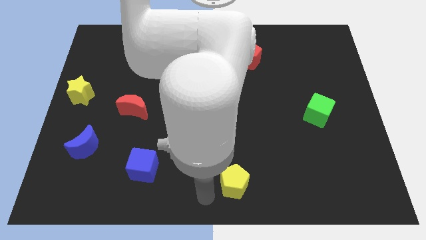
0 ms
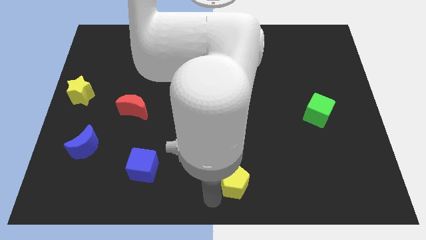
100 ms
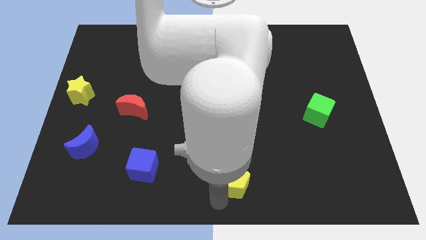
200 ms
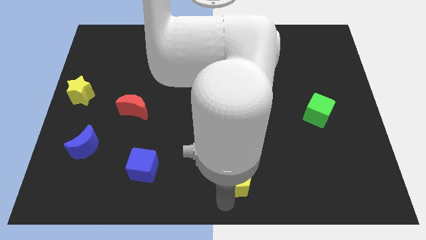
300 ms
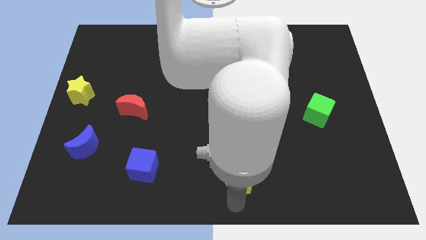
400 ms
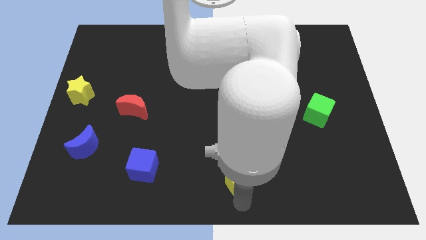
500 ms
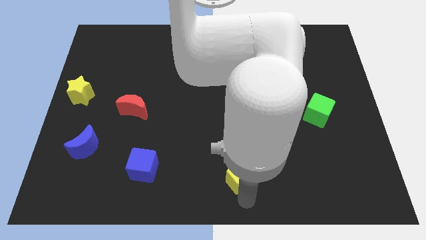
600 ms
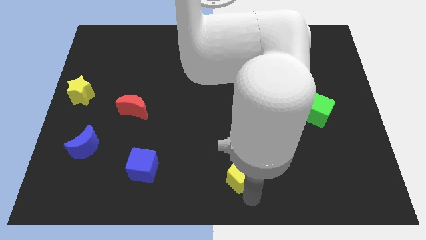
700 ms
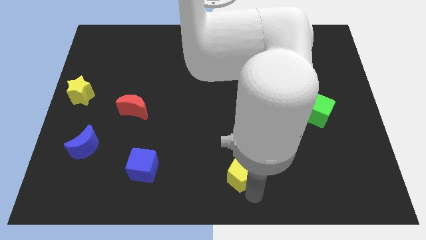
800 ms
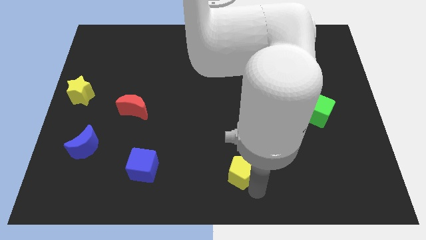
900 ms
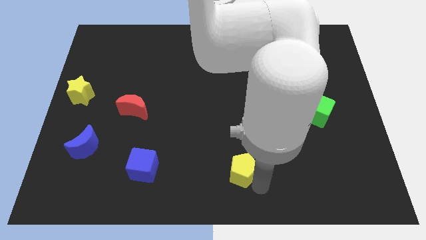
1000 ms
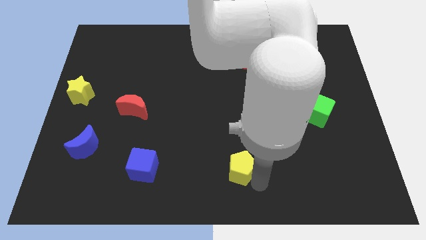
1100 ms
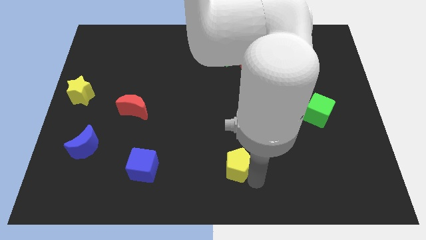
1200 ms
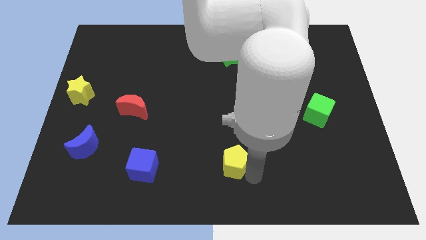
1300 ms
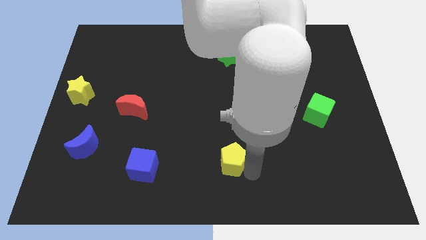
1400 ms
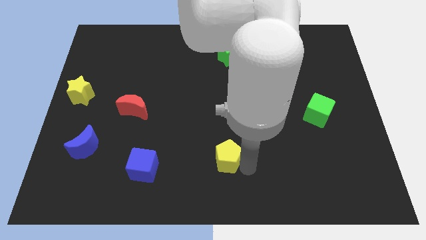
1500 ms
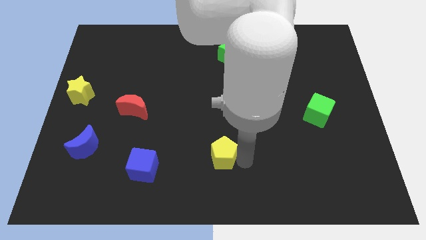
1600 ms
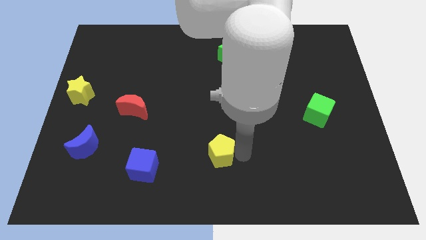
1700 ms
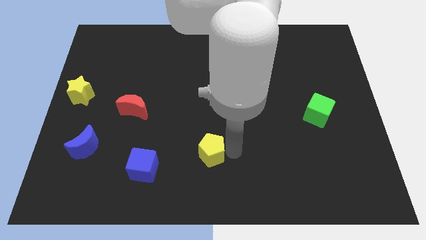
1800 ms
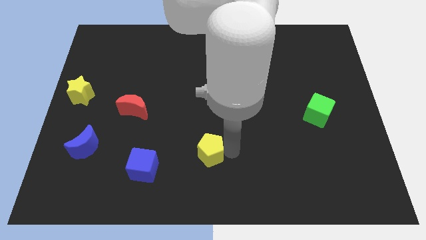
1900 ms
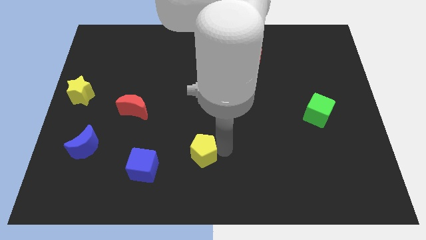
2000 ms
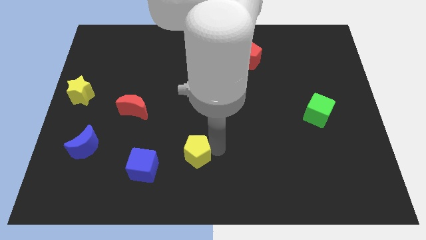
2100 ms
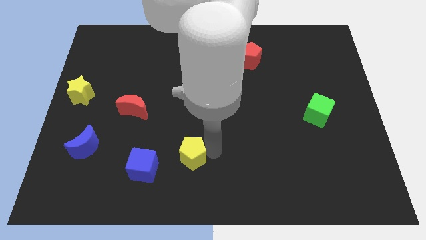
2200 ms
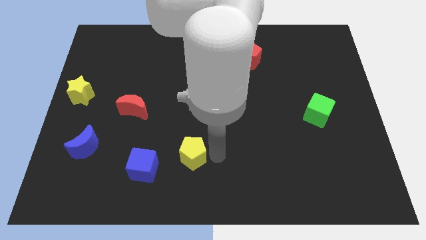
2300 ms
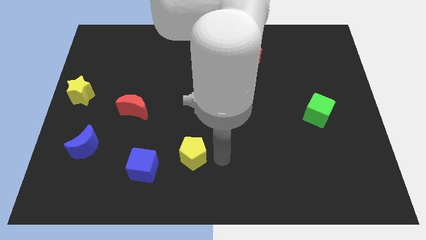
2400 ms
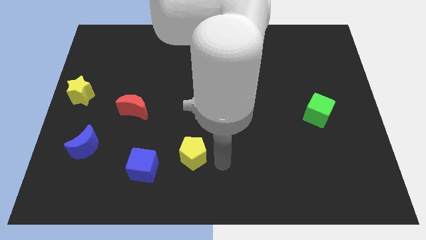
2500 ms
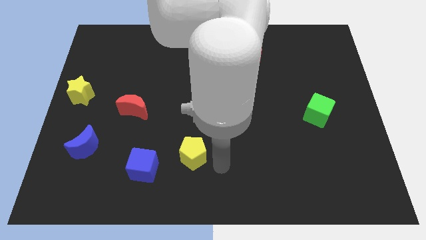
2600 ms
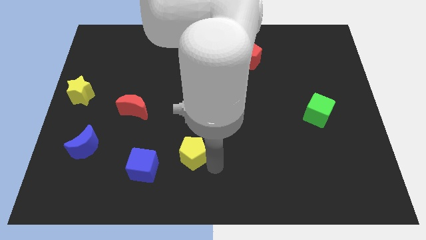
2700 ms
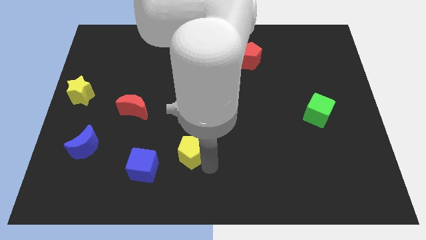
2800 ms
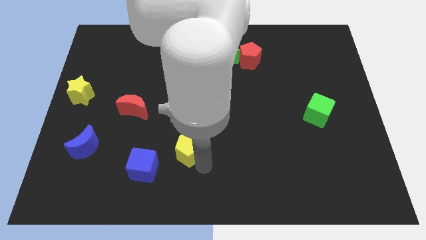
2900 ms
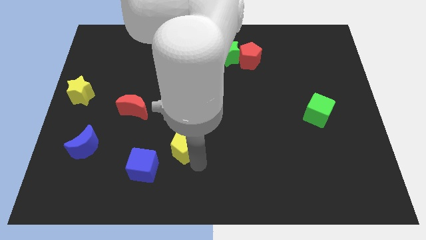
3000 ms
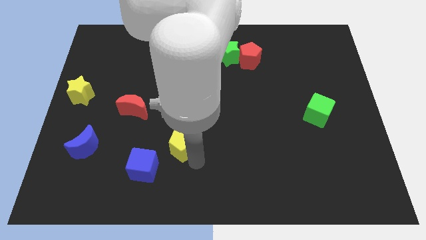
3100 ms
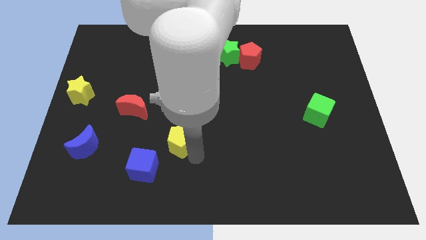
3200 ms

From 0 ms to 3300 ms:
place the yellow pentagon parallel to blue moon

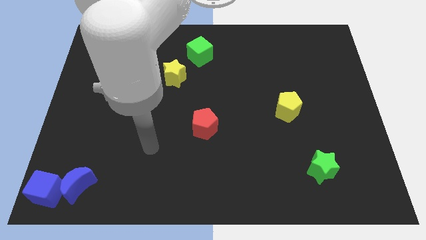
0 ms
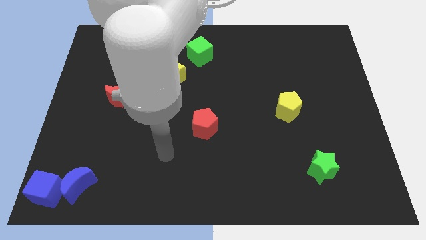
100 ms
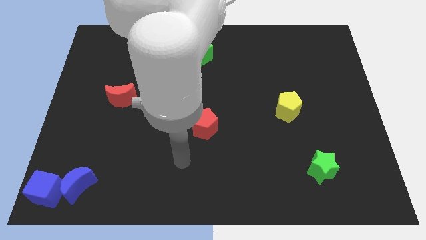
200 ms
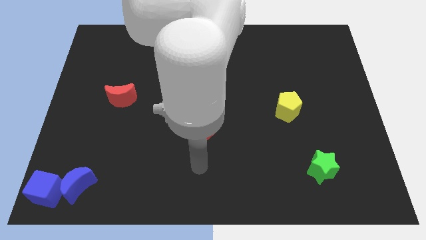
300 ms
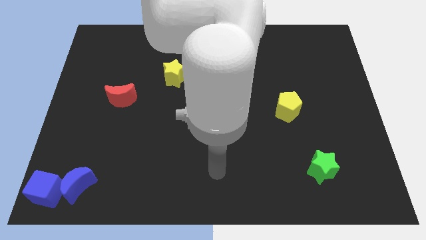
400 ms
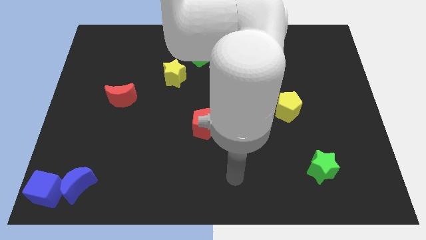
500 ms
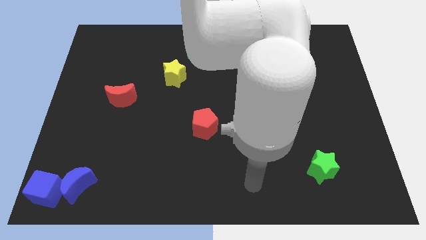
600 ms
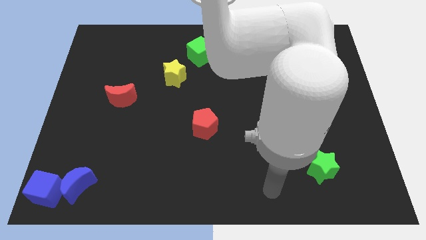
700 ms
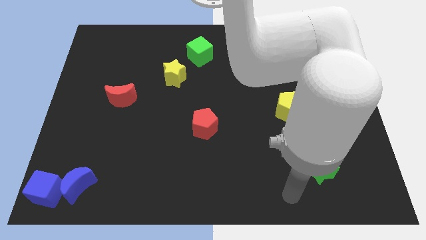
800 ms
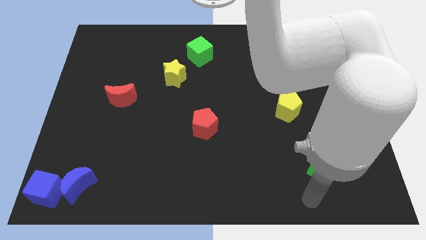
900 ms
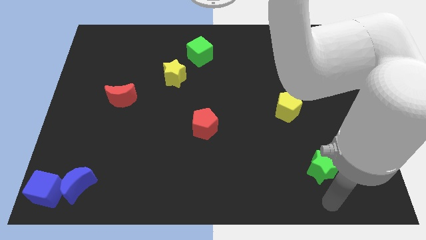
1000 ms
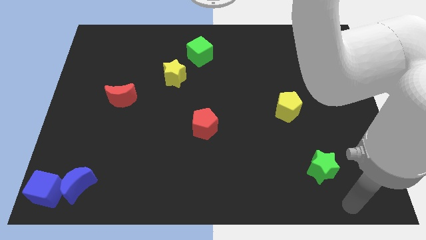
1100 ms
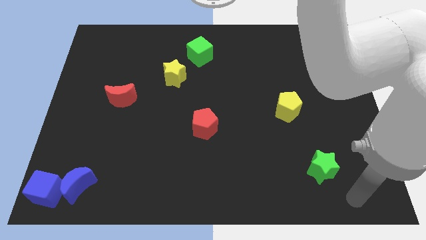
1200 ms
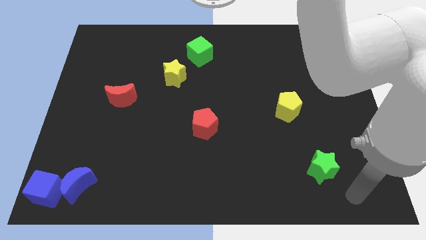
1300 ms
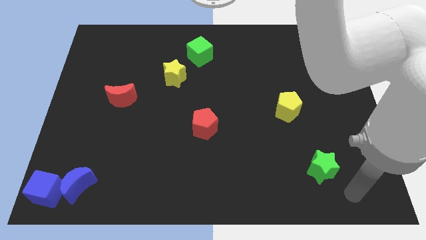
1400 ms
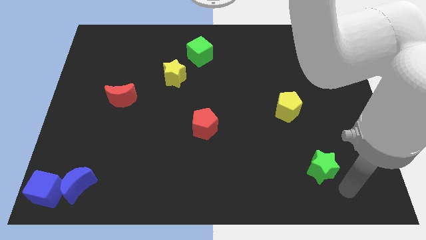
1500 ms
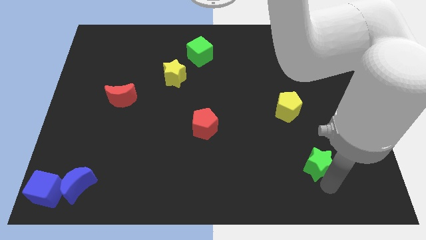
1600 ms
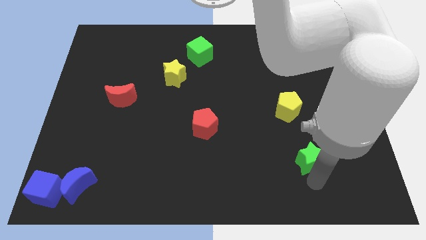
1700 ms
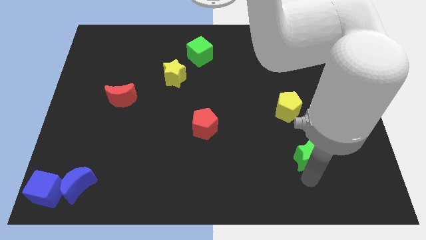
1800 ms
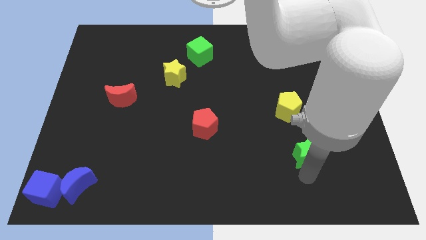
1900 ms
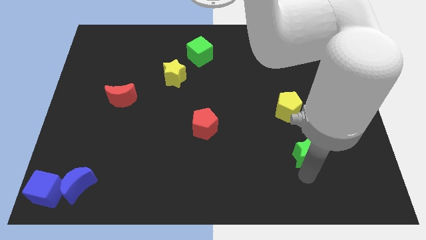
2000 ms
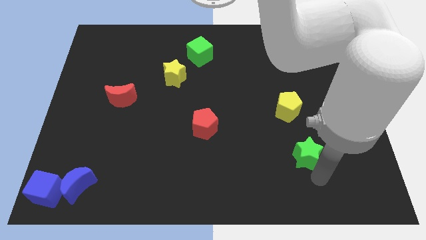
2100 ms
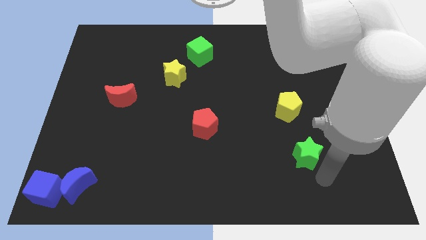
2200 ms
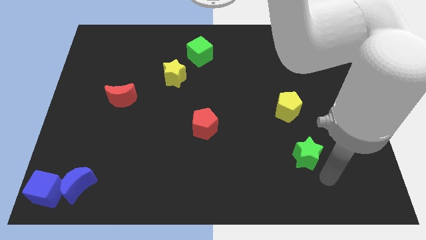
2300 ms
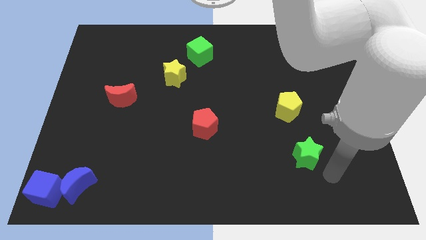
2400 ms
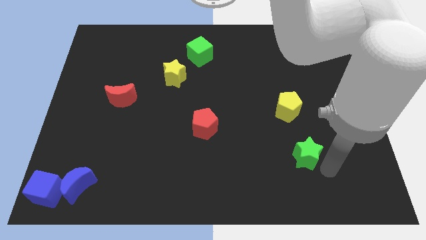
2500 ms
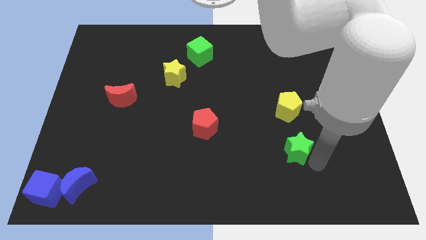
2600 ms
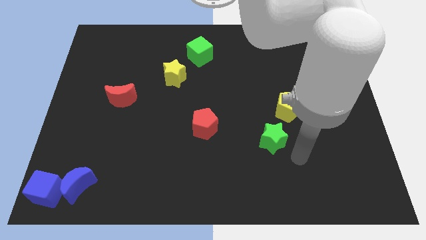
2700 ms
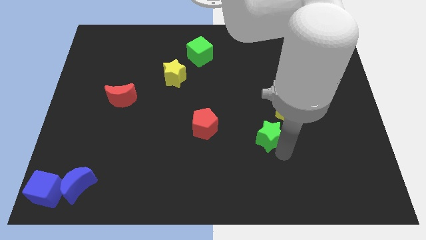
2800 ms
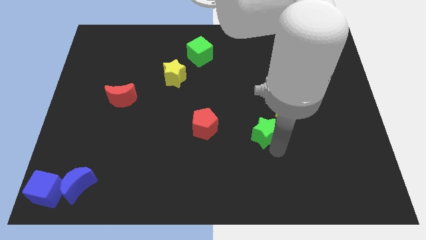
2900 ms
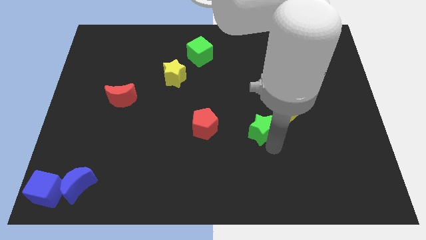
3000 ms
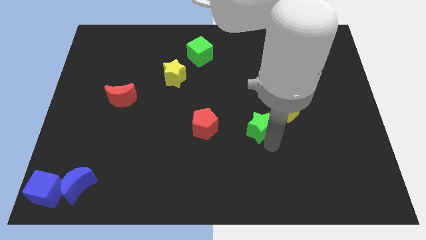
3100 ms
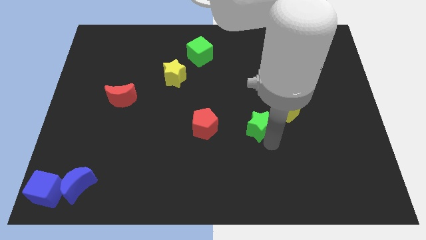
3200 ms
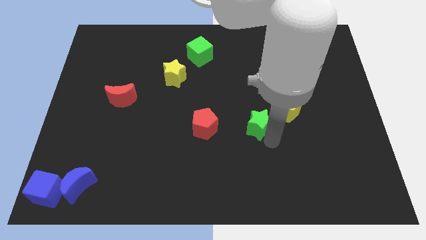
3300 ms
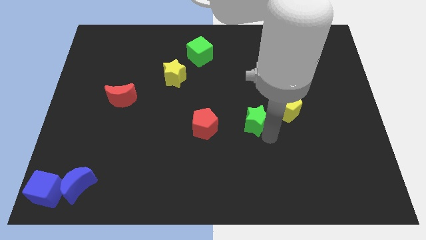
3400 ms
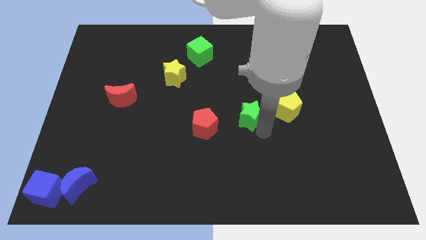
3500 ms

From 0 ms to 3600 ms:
place the green star in between the red and yellow pentagons

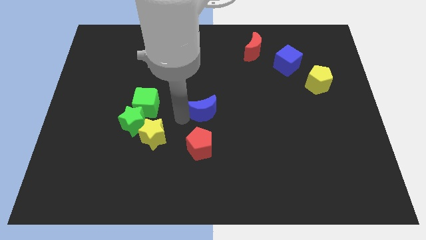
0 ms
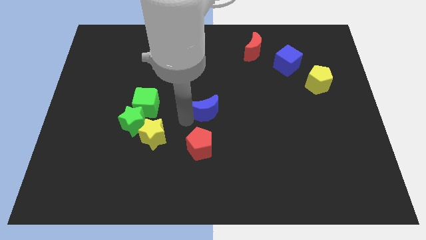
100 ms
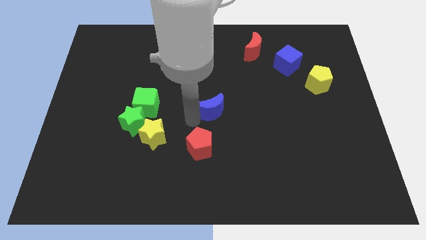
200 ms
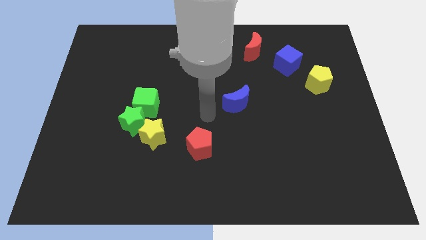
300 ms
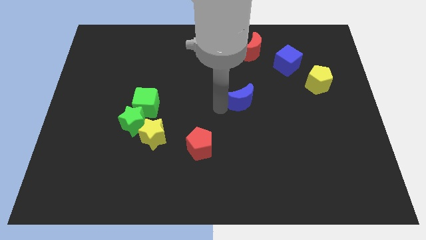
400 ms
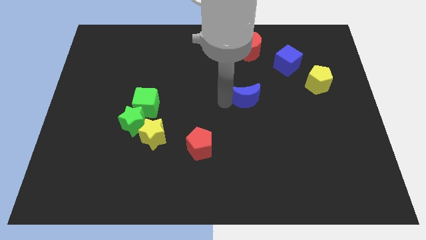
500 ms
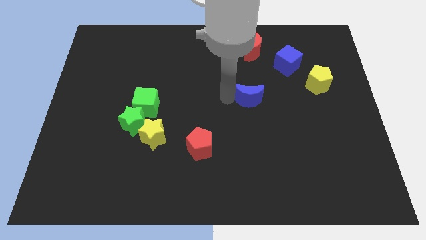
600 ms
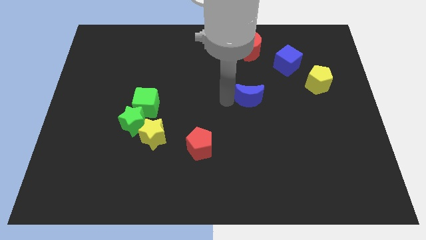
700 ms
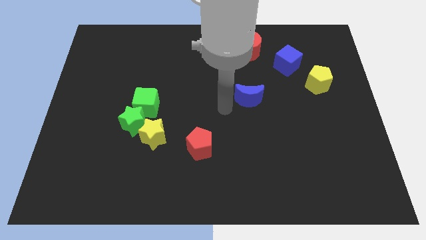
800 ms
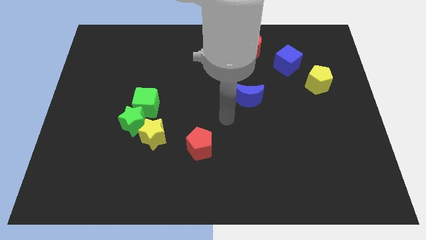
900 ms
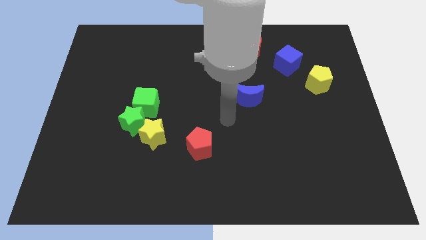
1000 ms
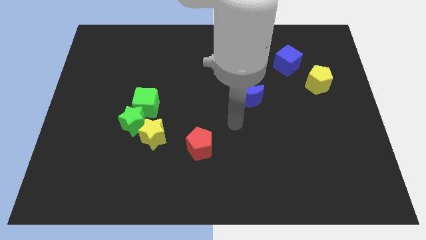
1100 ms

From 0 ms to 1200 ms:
move the blue moon to the bottom side of the red moon

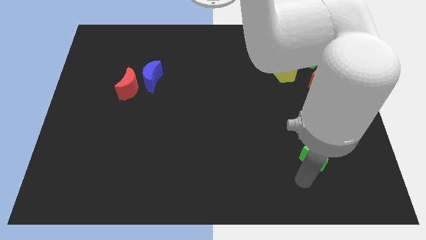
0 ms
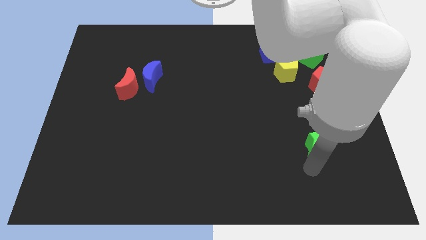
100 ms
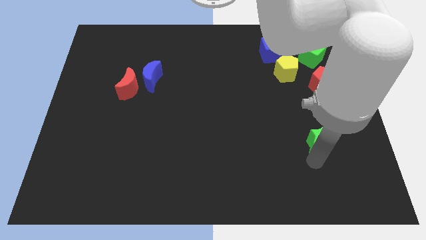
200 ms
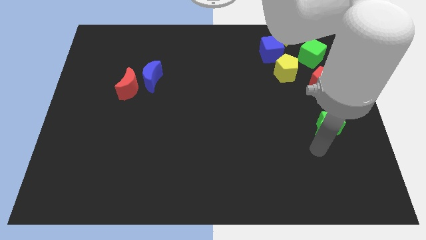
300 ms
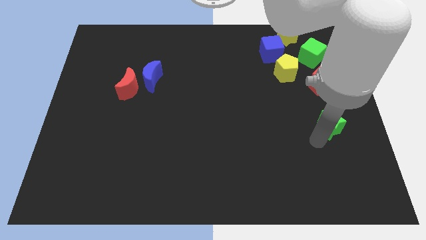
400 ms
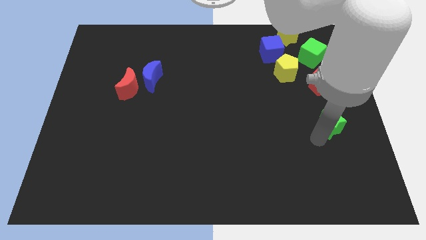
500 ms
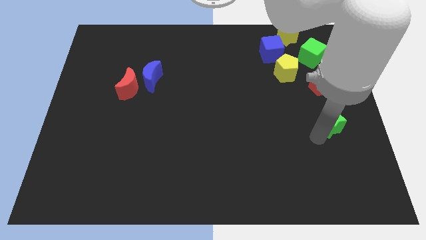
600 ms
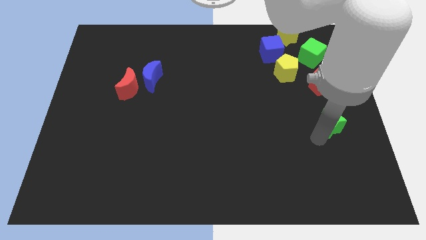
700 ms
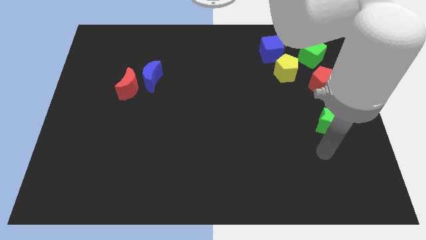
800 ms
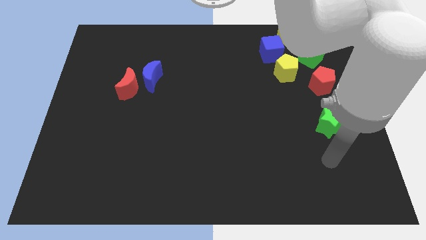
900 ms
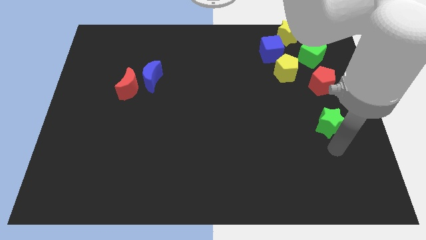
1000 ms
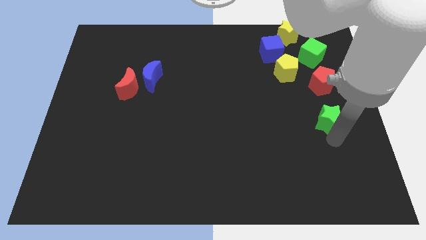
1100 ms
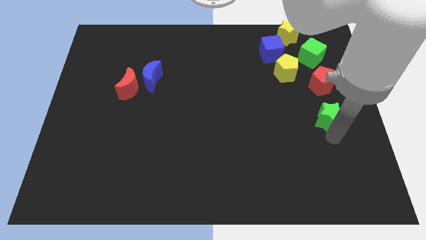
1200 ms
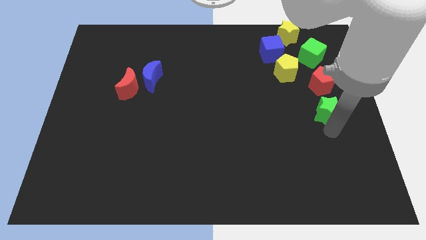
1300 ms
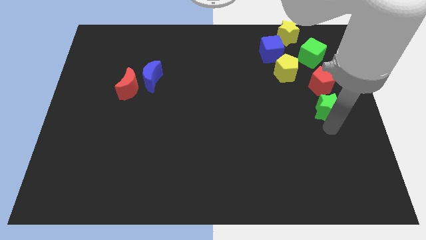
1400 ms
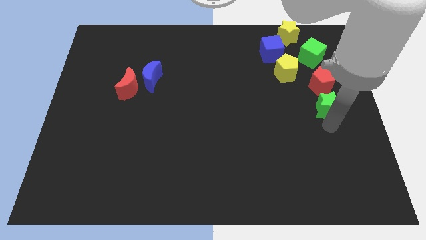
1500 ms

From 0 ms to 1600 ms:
push the green star into the red pentagon
